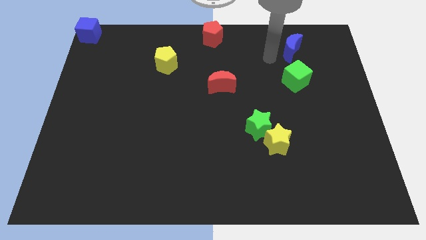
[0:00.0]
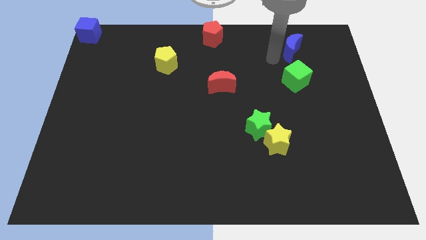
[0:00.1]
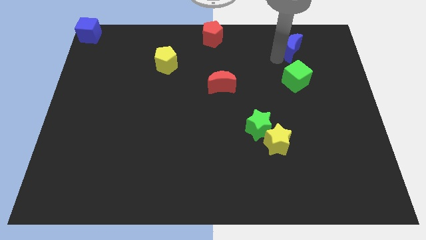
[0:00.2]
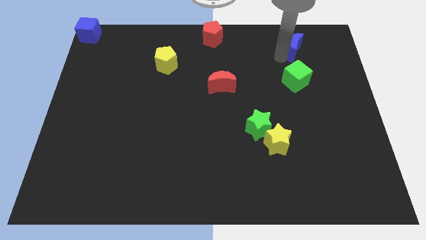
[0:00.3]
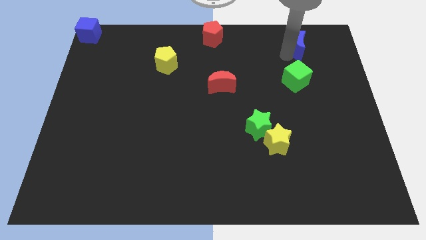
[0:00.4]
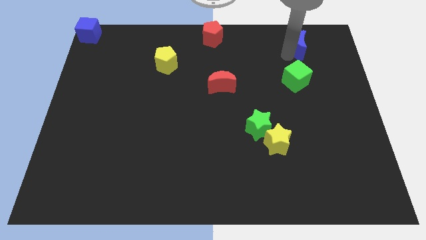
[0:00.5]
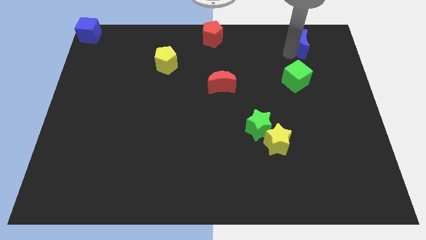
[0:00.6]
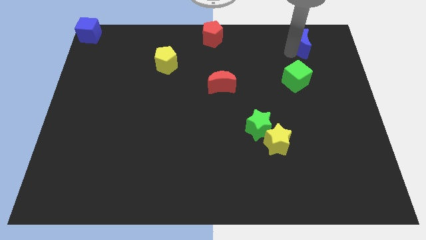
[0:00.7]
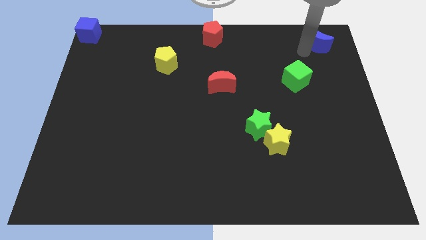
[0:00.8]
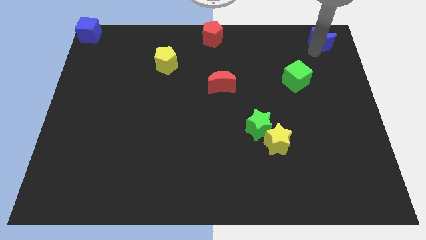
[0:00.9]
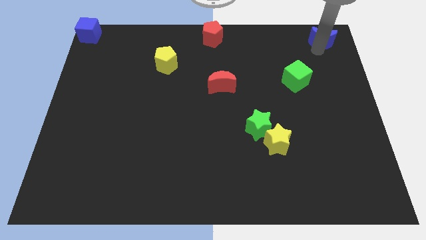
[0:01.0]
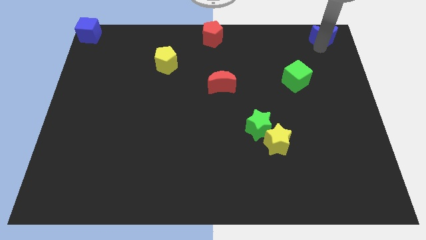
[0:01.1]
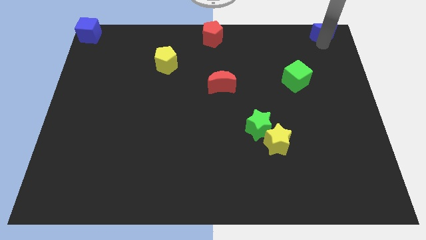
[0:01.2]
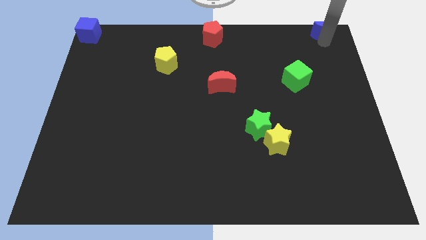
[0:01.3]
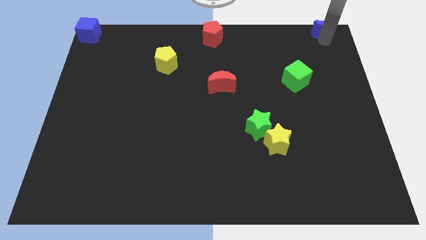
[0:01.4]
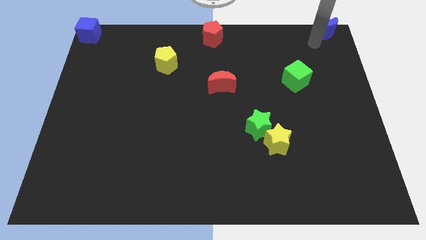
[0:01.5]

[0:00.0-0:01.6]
move the blue moon towards the top right corner

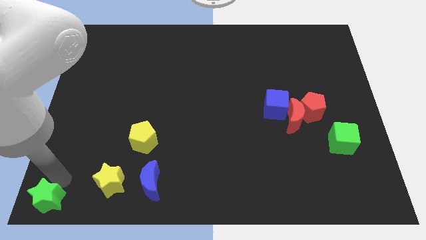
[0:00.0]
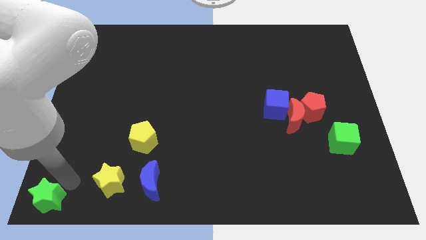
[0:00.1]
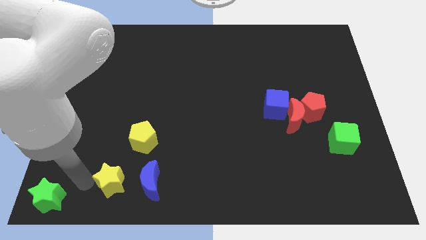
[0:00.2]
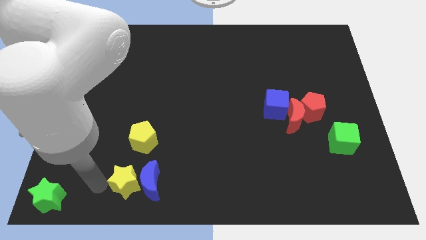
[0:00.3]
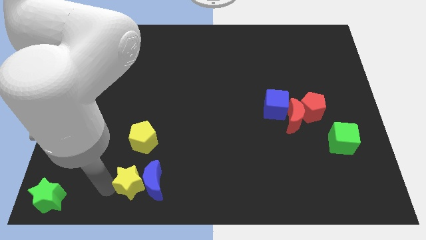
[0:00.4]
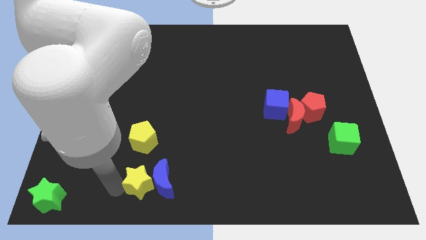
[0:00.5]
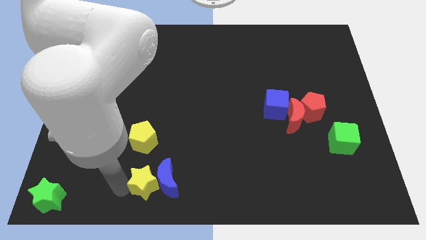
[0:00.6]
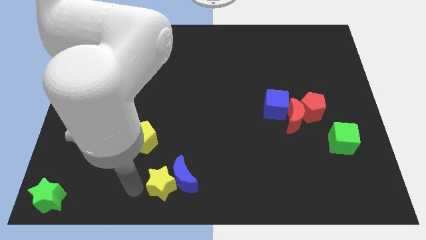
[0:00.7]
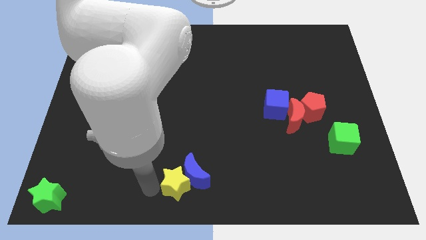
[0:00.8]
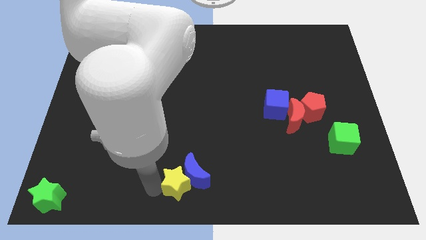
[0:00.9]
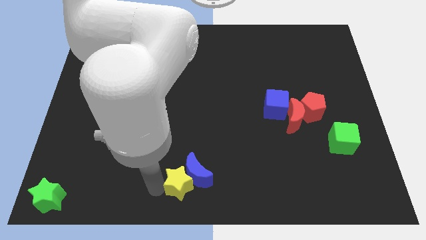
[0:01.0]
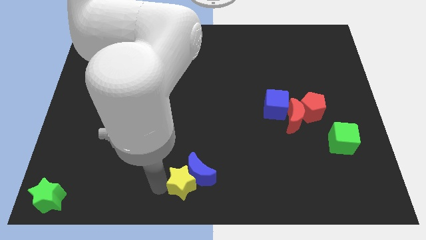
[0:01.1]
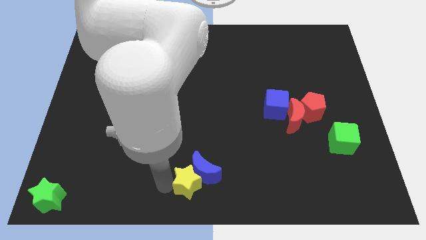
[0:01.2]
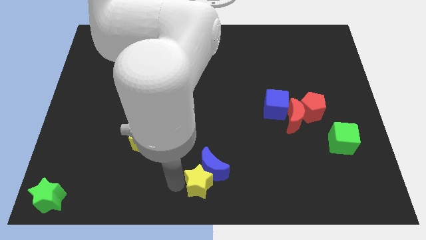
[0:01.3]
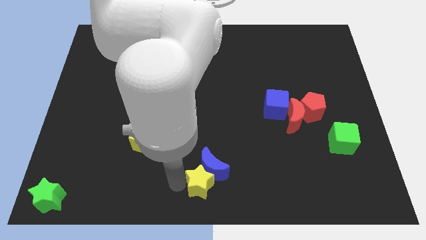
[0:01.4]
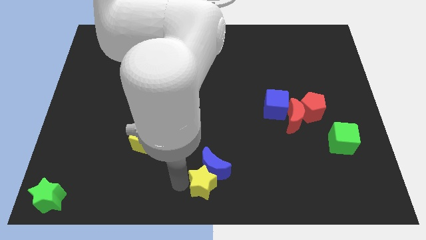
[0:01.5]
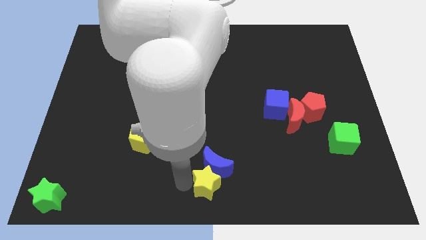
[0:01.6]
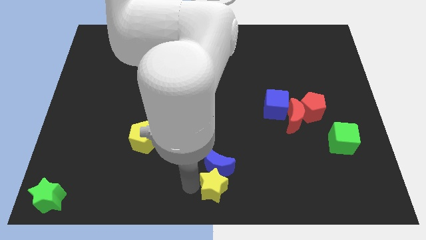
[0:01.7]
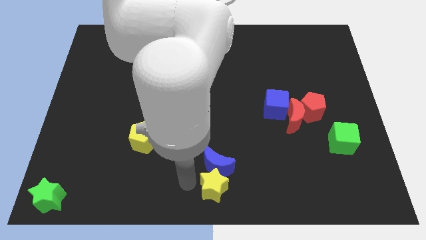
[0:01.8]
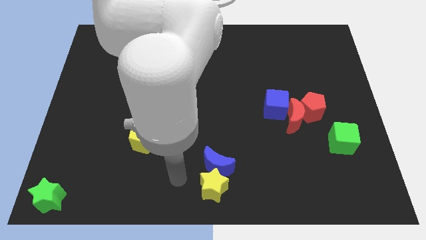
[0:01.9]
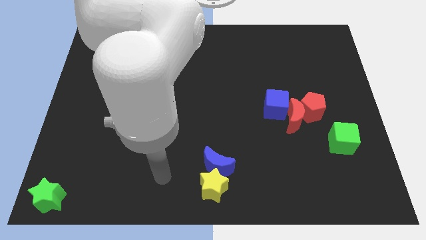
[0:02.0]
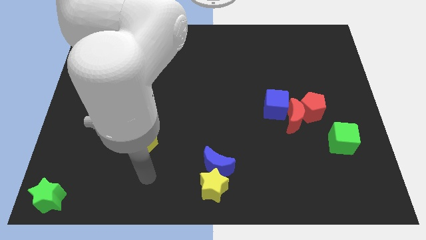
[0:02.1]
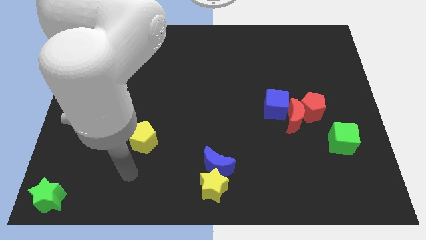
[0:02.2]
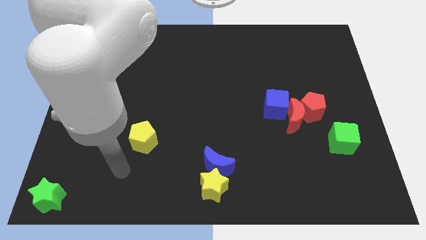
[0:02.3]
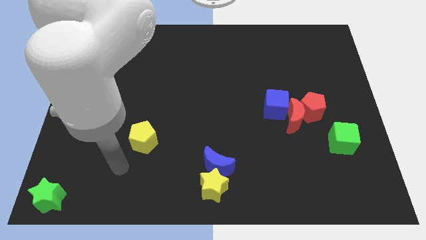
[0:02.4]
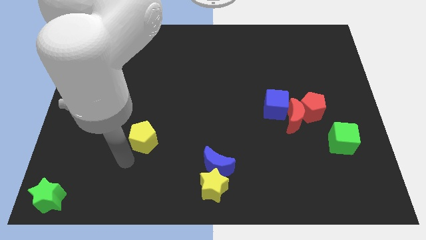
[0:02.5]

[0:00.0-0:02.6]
push the yellow star to the bottom center

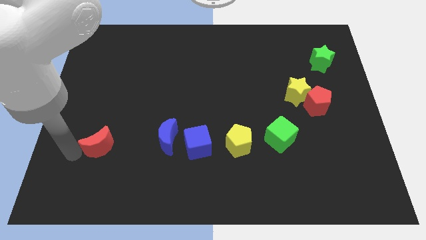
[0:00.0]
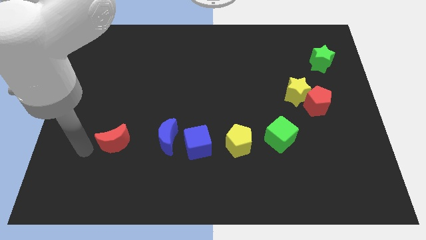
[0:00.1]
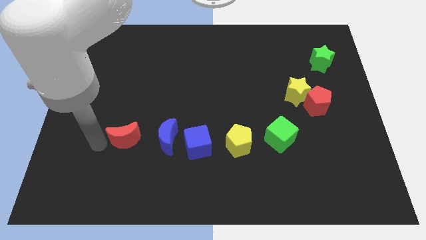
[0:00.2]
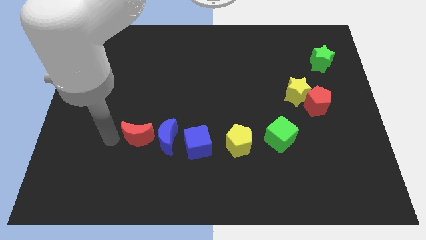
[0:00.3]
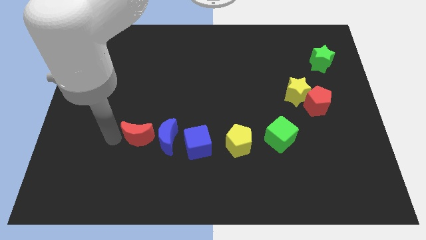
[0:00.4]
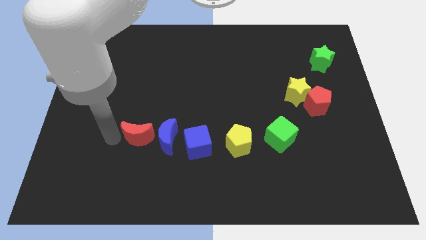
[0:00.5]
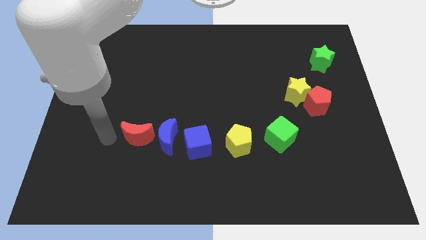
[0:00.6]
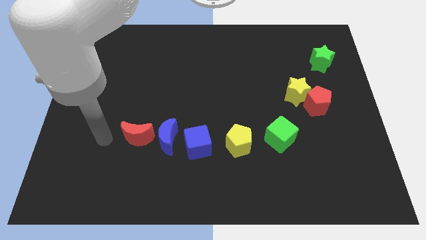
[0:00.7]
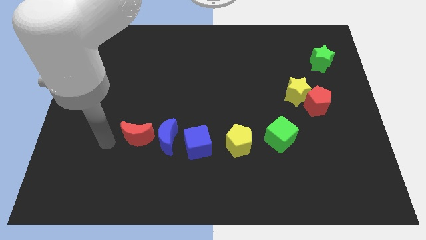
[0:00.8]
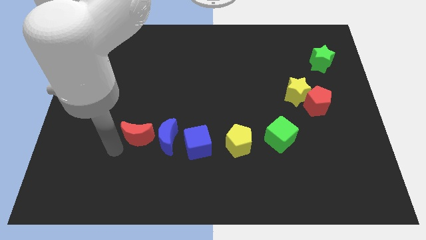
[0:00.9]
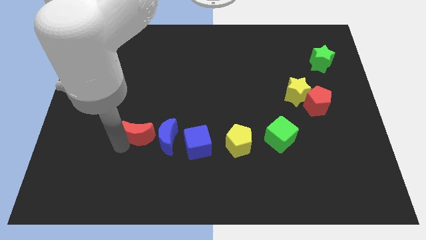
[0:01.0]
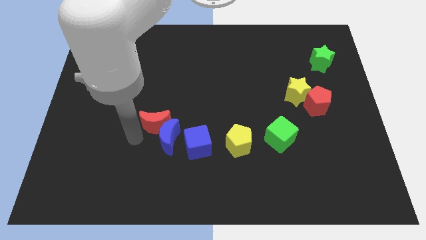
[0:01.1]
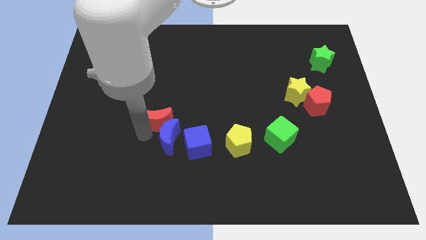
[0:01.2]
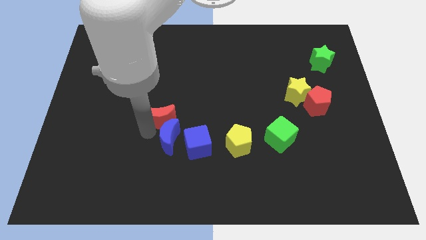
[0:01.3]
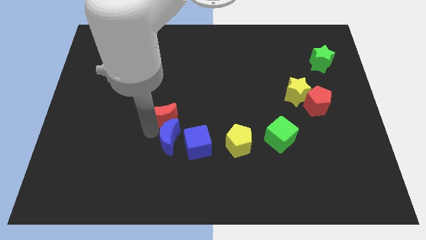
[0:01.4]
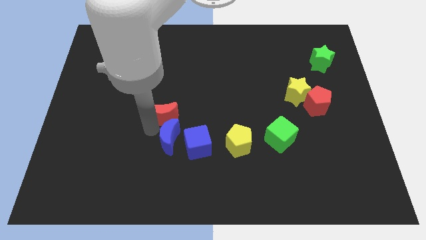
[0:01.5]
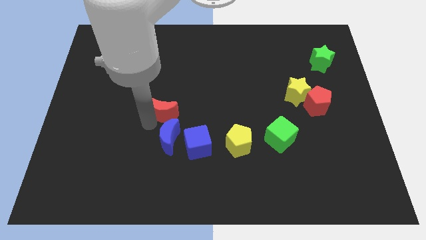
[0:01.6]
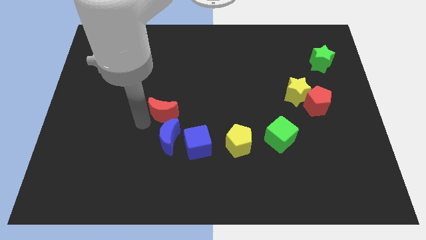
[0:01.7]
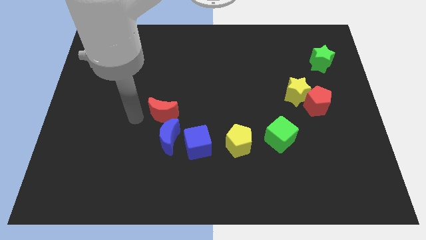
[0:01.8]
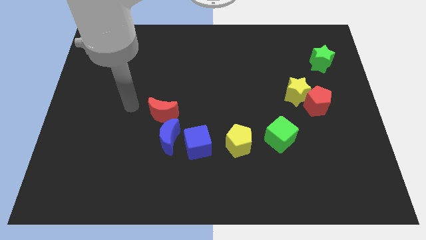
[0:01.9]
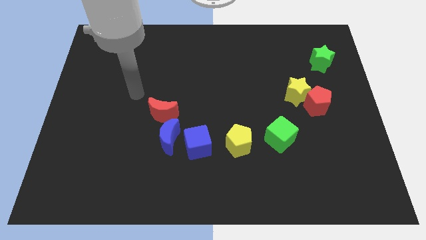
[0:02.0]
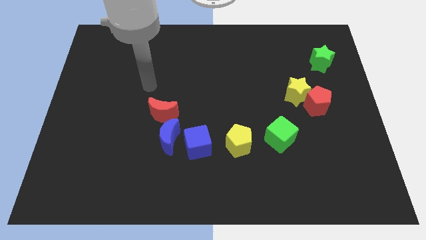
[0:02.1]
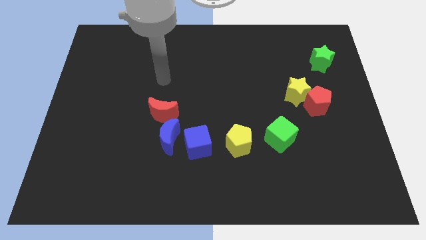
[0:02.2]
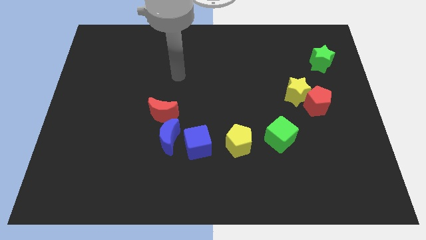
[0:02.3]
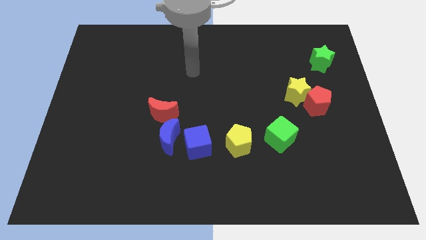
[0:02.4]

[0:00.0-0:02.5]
place the red crescent near the blue crescent

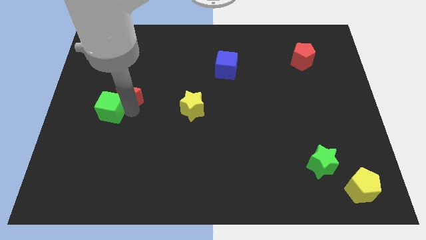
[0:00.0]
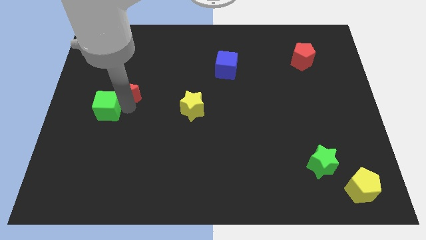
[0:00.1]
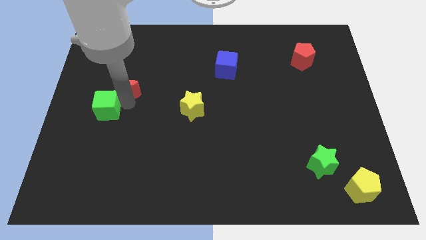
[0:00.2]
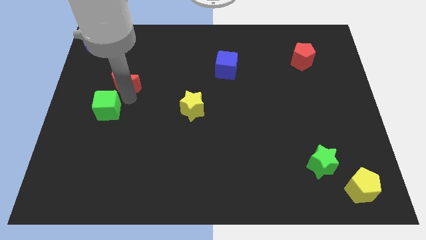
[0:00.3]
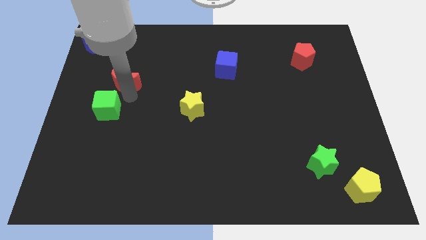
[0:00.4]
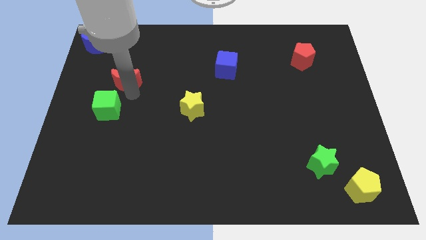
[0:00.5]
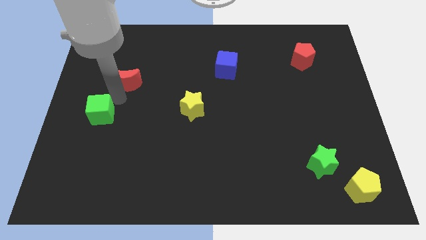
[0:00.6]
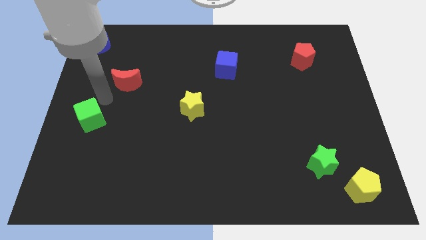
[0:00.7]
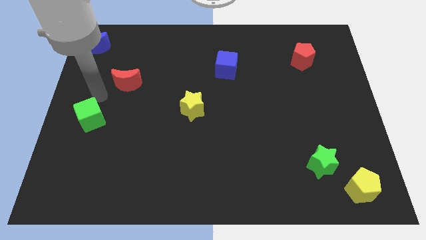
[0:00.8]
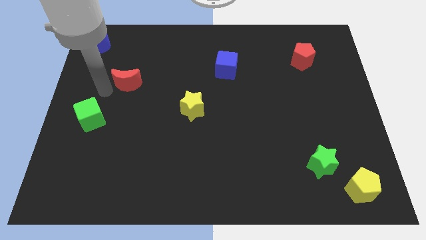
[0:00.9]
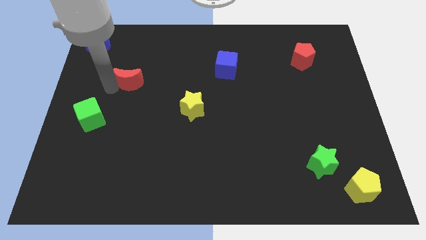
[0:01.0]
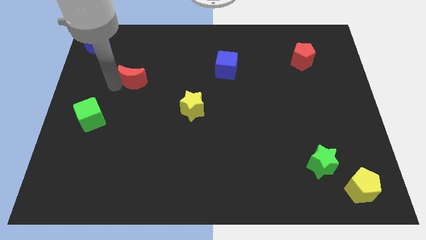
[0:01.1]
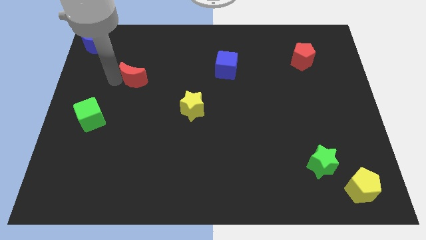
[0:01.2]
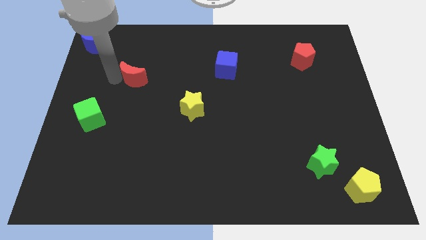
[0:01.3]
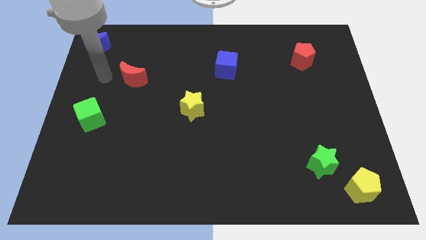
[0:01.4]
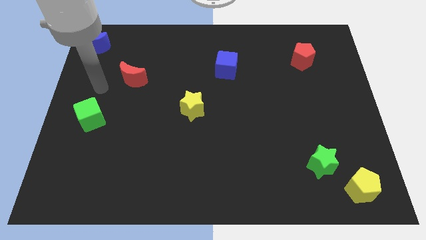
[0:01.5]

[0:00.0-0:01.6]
separate the red crescent from the green cube

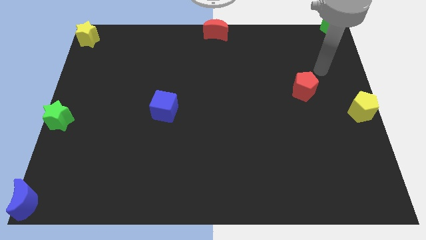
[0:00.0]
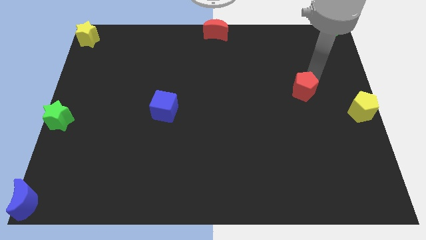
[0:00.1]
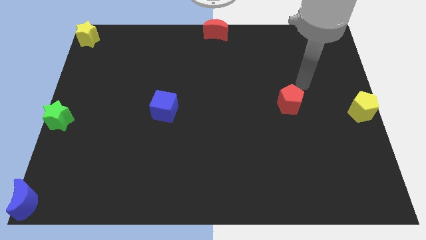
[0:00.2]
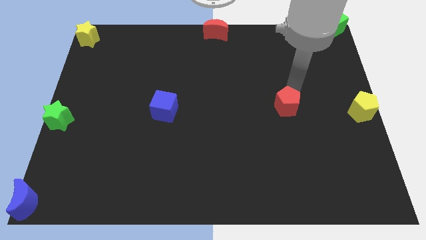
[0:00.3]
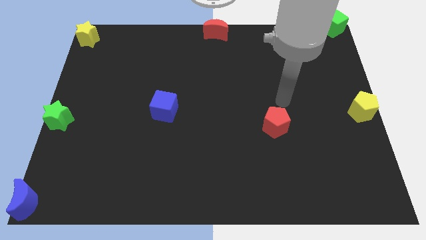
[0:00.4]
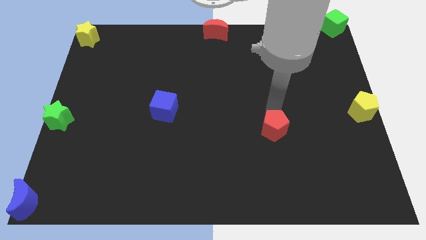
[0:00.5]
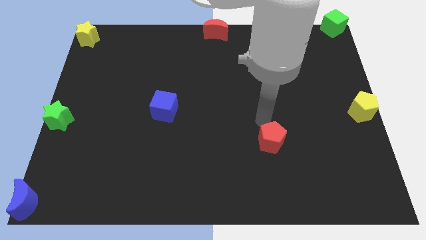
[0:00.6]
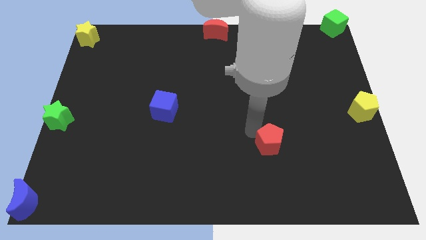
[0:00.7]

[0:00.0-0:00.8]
push the red pentagon towards the bottom center of the board
